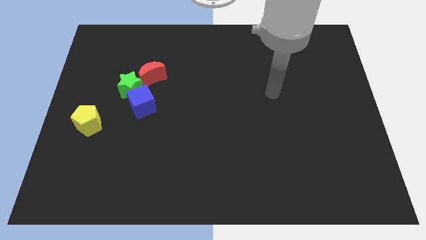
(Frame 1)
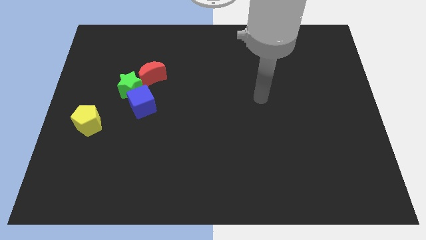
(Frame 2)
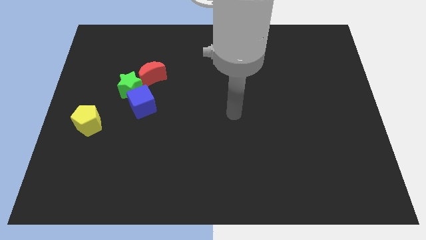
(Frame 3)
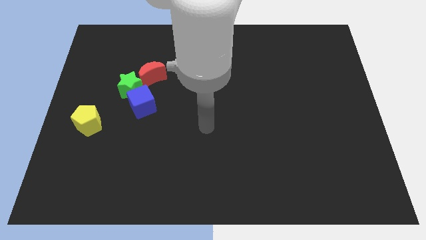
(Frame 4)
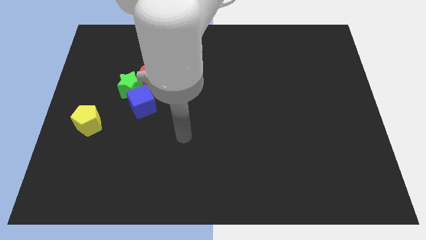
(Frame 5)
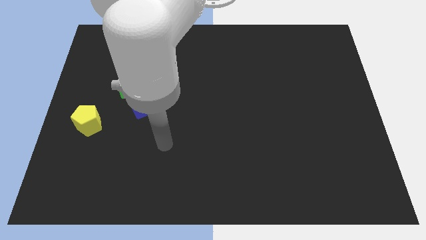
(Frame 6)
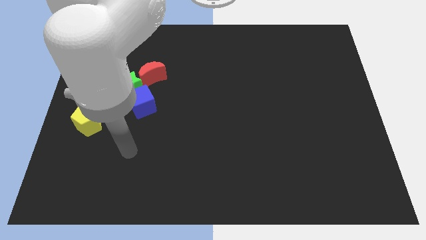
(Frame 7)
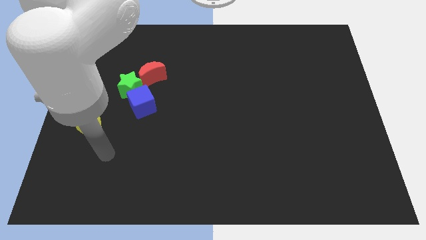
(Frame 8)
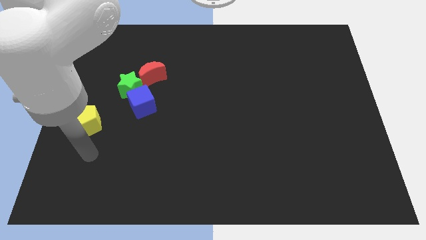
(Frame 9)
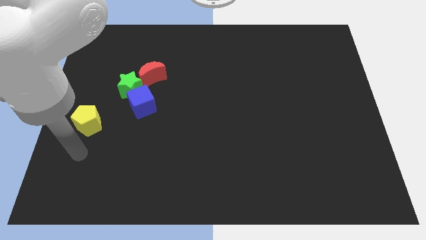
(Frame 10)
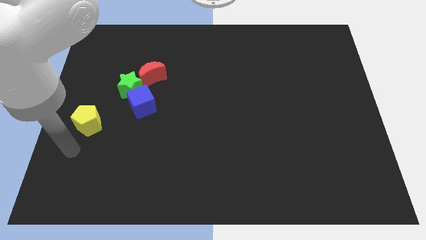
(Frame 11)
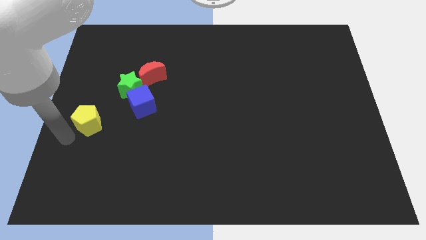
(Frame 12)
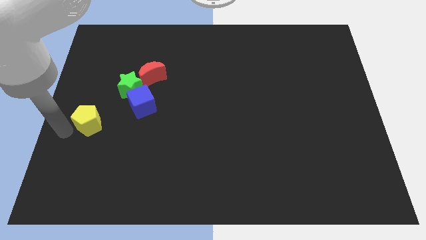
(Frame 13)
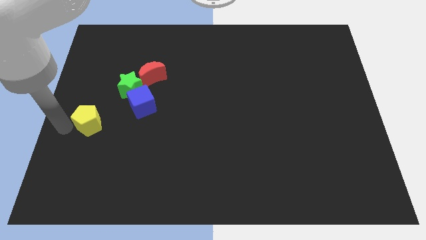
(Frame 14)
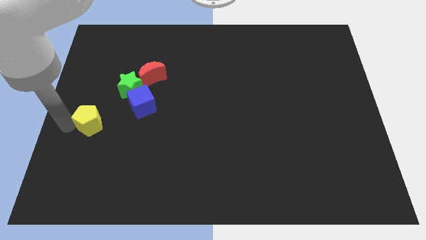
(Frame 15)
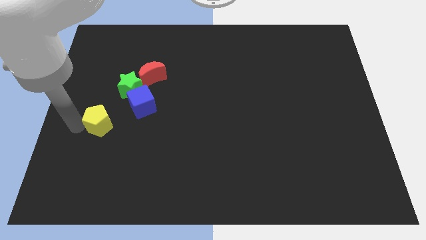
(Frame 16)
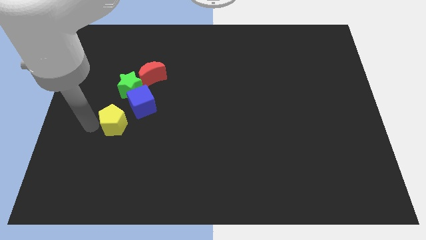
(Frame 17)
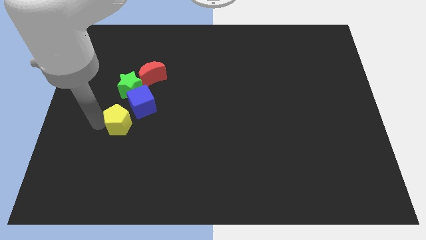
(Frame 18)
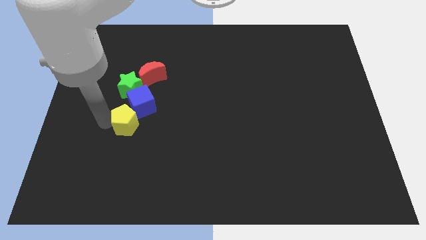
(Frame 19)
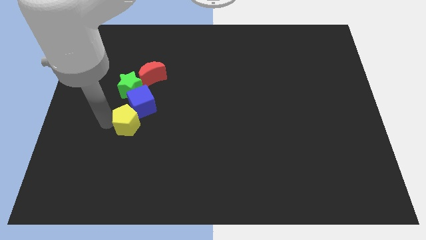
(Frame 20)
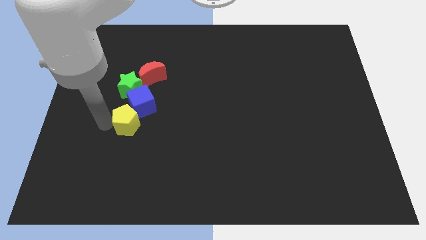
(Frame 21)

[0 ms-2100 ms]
slide the pentagon close to the cube

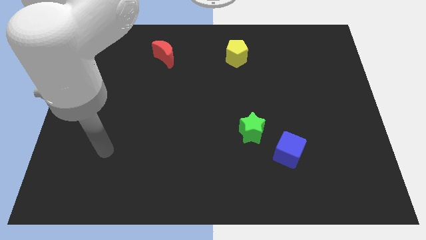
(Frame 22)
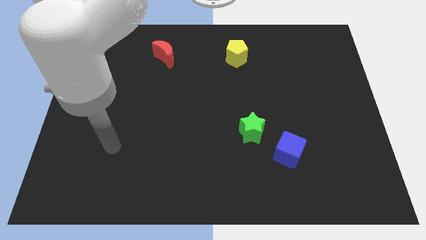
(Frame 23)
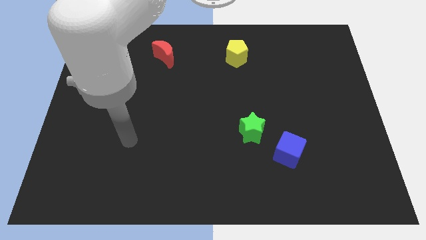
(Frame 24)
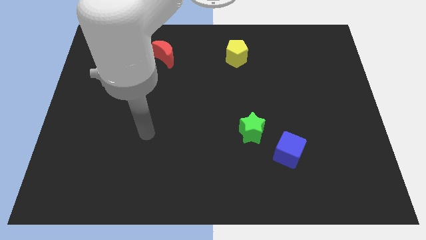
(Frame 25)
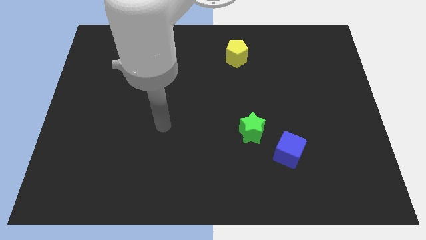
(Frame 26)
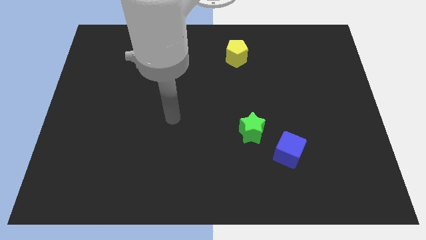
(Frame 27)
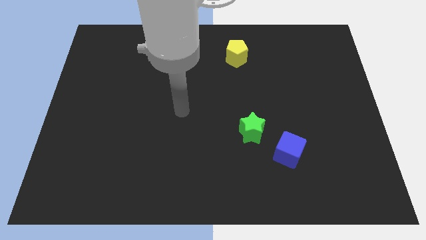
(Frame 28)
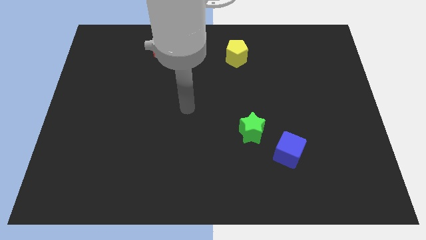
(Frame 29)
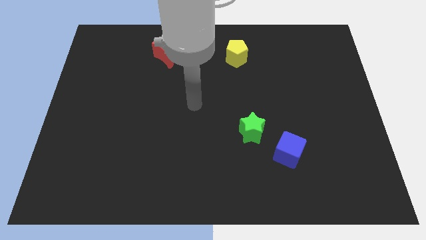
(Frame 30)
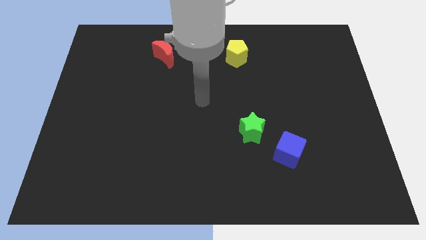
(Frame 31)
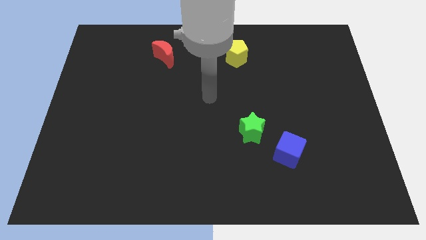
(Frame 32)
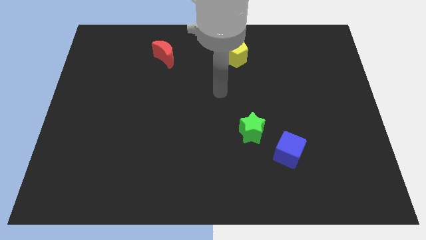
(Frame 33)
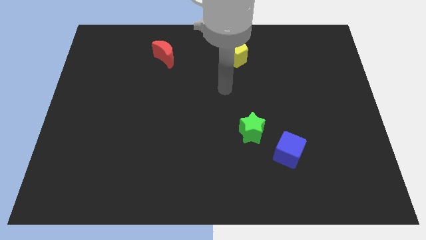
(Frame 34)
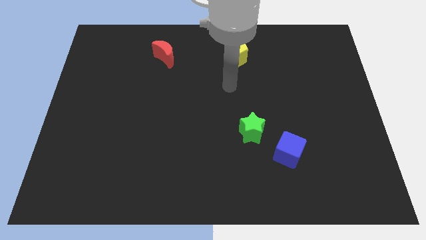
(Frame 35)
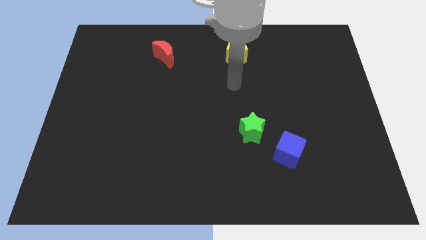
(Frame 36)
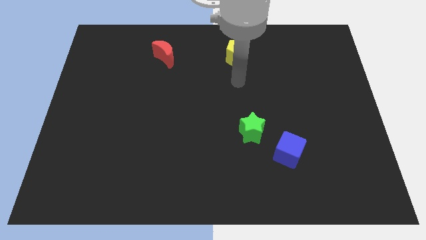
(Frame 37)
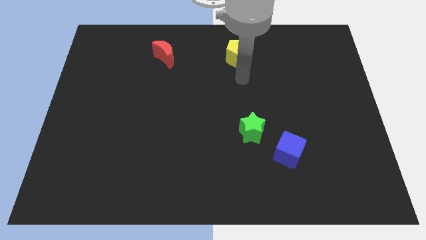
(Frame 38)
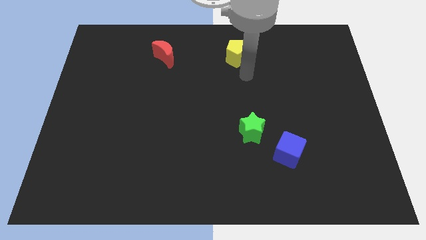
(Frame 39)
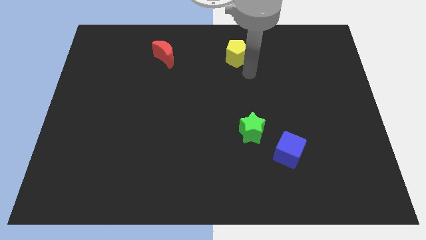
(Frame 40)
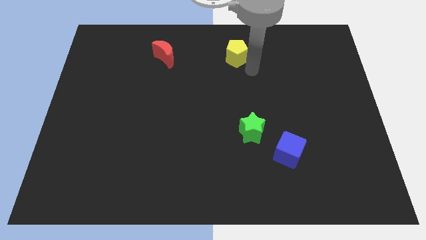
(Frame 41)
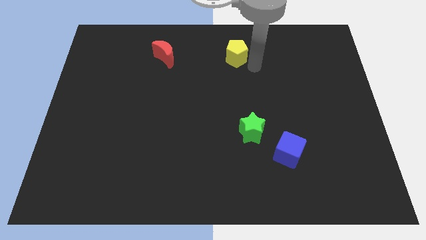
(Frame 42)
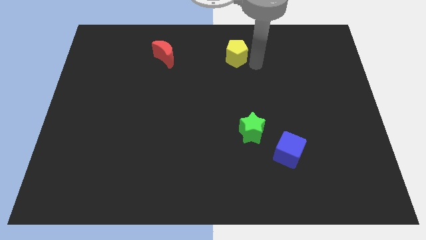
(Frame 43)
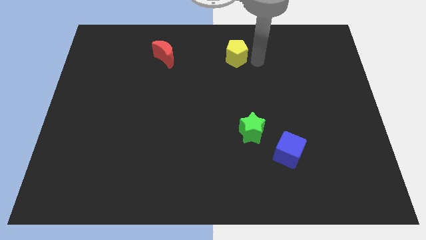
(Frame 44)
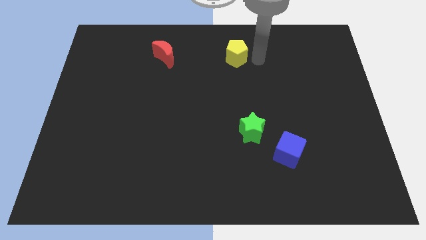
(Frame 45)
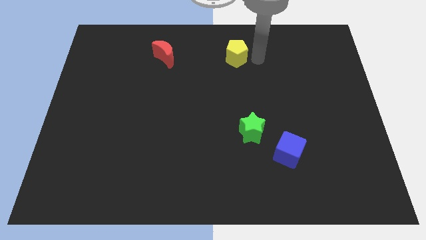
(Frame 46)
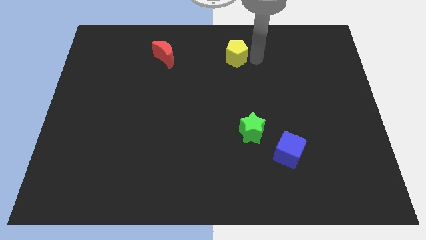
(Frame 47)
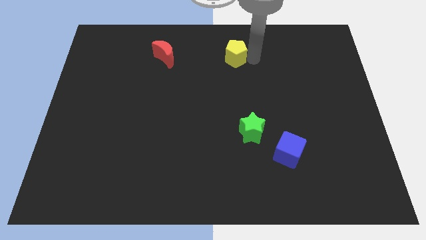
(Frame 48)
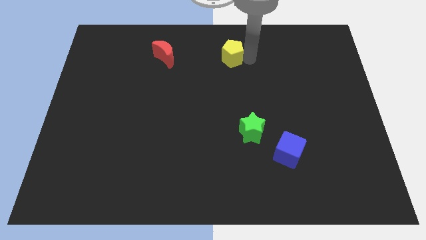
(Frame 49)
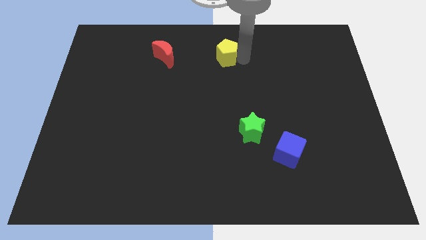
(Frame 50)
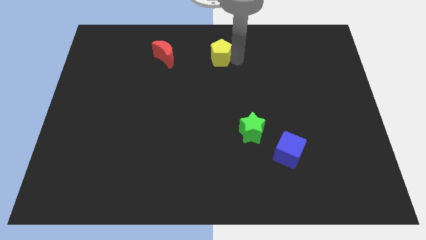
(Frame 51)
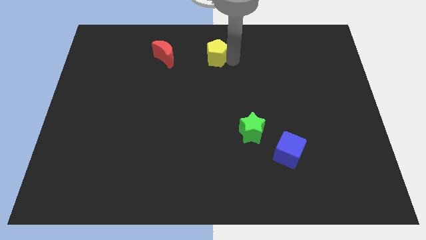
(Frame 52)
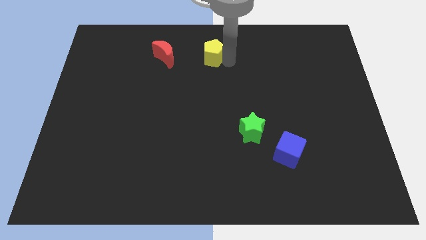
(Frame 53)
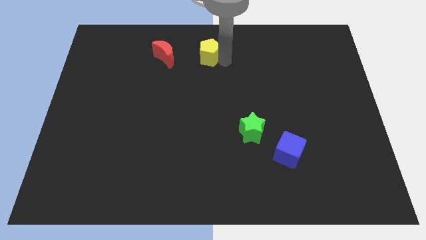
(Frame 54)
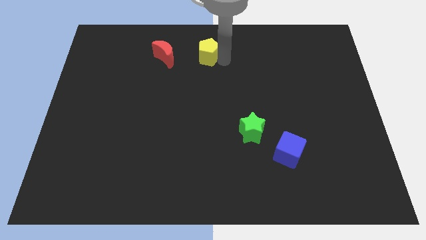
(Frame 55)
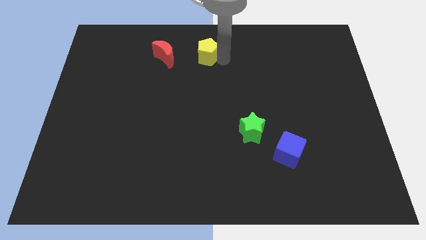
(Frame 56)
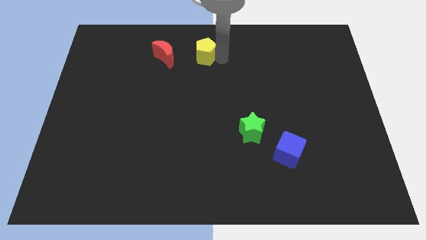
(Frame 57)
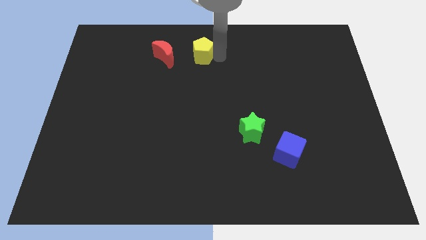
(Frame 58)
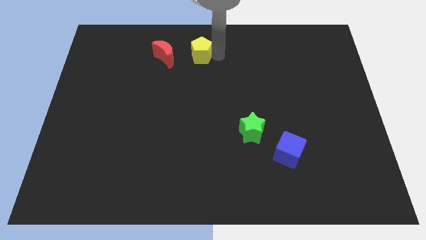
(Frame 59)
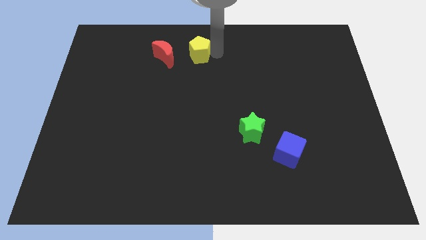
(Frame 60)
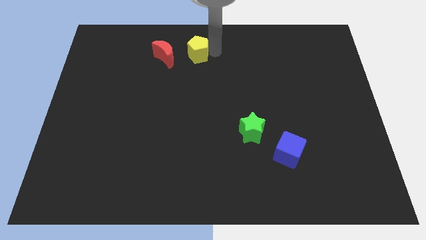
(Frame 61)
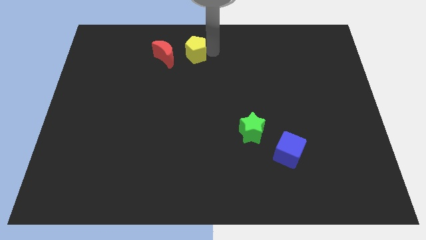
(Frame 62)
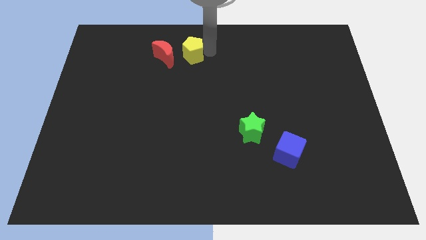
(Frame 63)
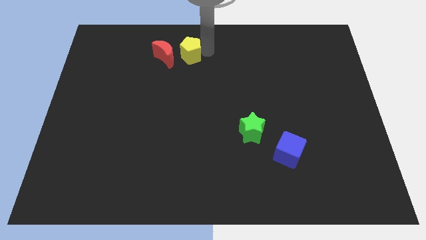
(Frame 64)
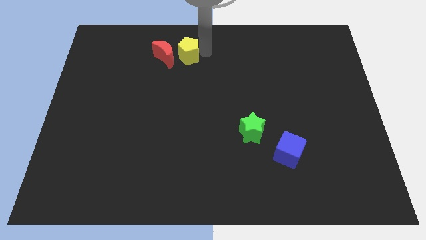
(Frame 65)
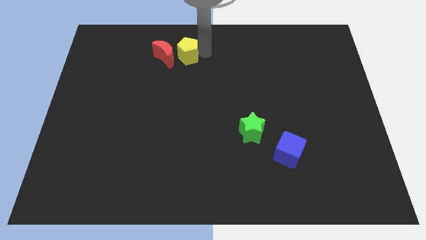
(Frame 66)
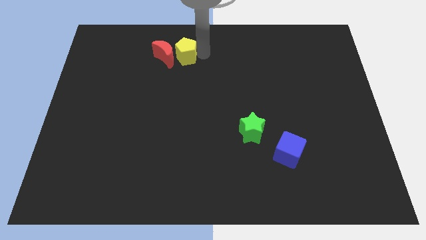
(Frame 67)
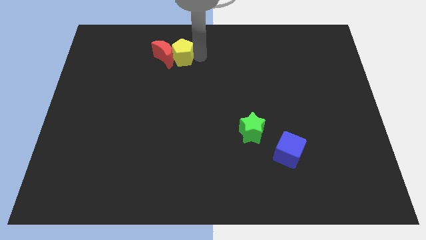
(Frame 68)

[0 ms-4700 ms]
move the pentagon to the red block

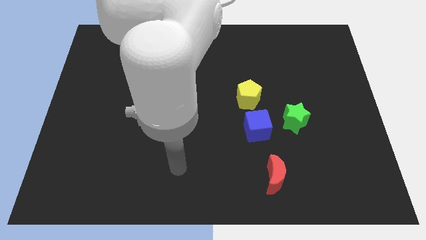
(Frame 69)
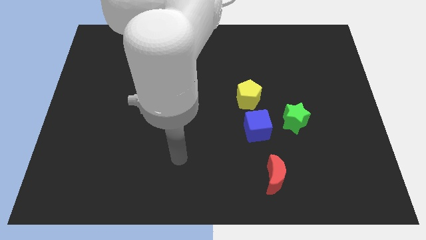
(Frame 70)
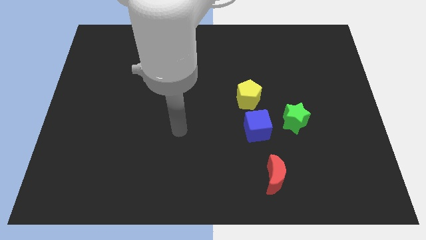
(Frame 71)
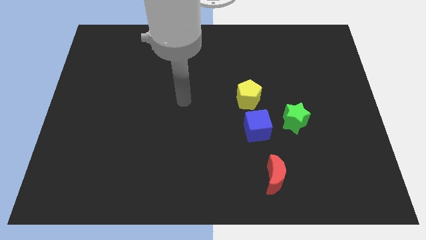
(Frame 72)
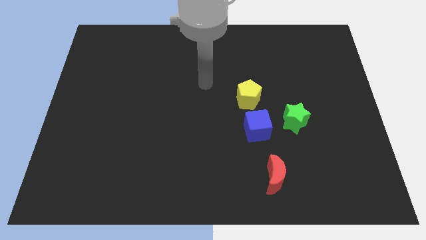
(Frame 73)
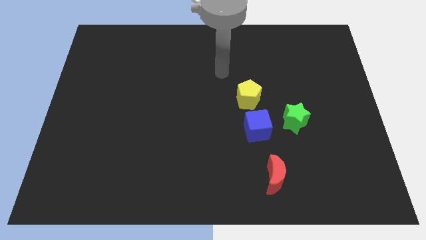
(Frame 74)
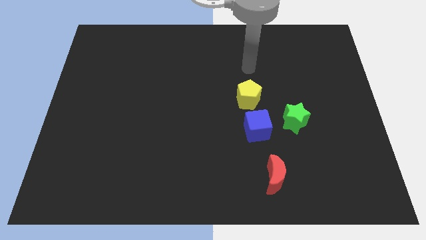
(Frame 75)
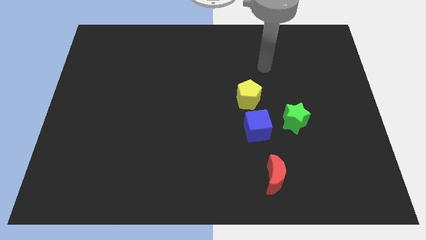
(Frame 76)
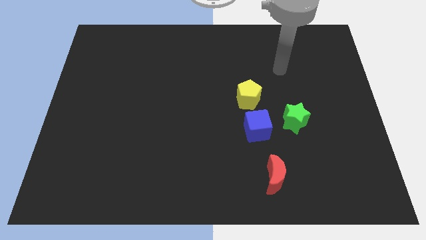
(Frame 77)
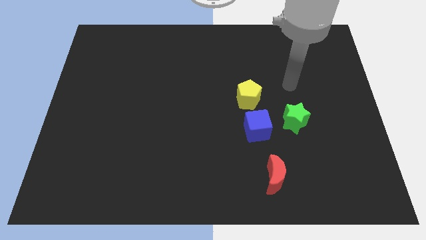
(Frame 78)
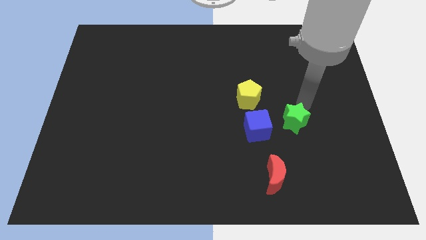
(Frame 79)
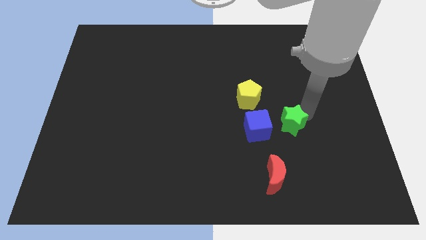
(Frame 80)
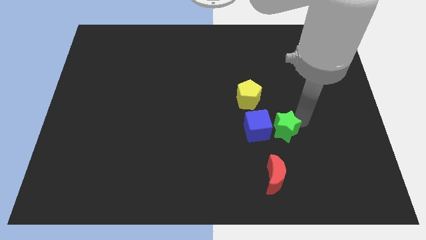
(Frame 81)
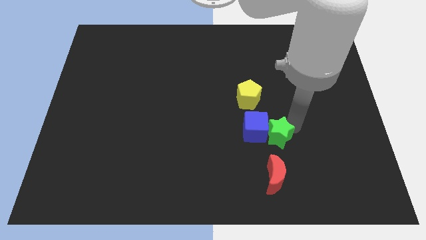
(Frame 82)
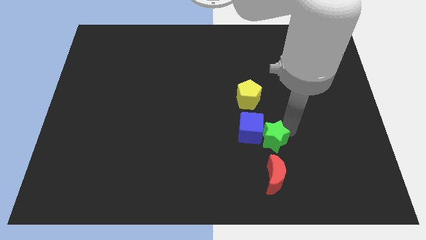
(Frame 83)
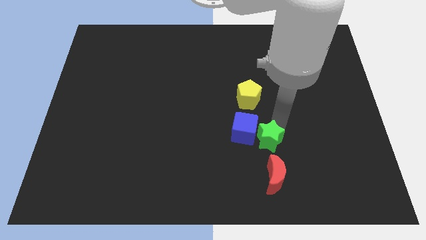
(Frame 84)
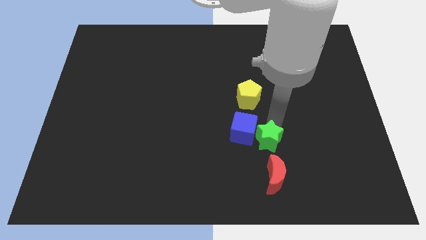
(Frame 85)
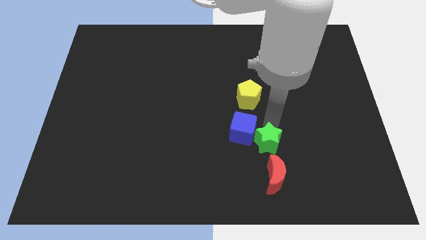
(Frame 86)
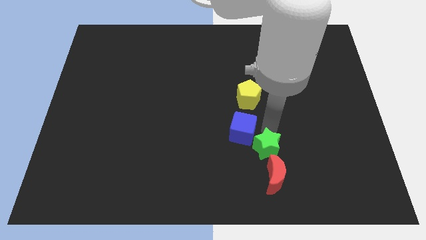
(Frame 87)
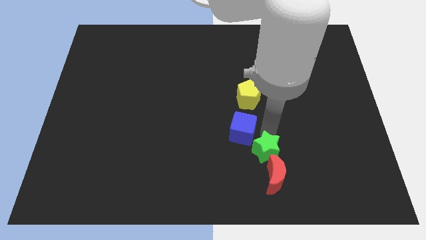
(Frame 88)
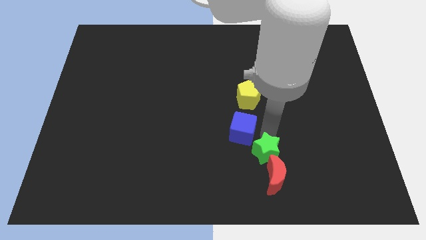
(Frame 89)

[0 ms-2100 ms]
push the green star towards the red block

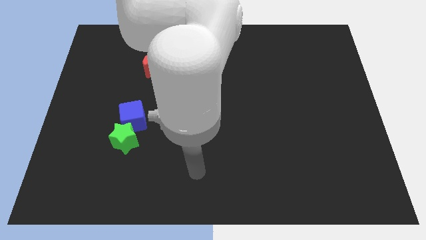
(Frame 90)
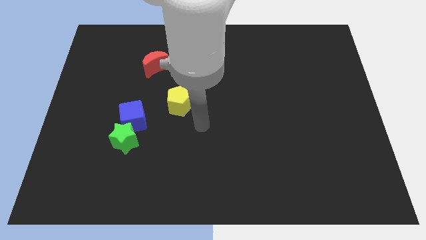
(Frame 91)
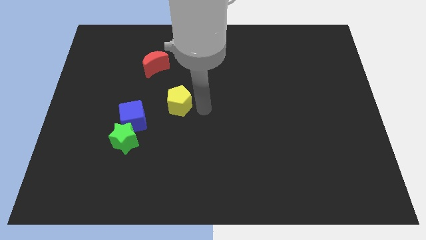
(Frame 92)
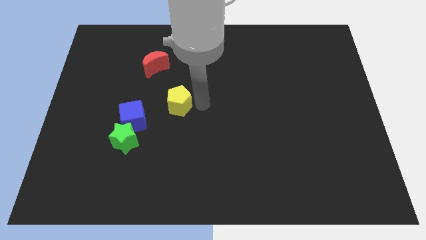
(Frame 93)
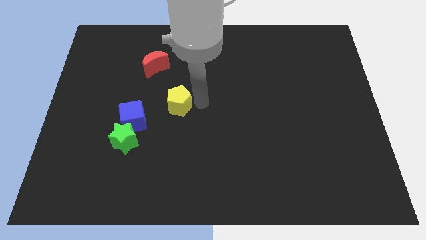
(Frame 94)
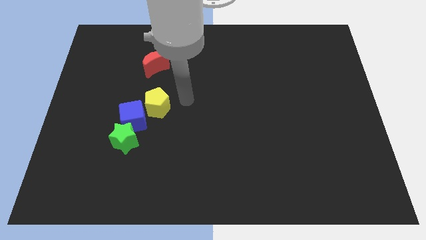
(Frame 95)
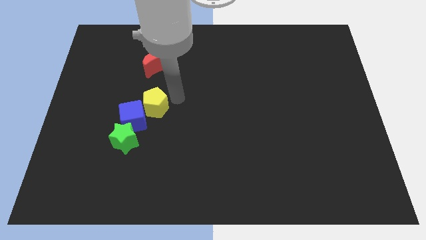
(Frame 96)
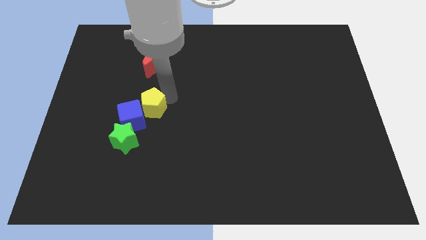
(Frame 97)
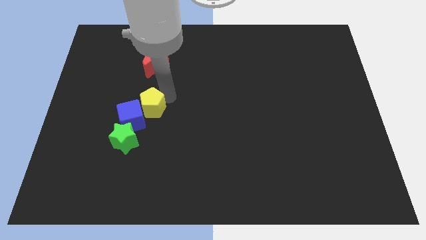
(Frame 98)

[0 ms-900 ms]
slide the yellow block next to the cube
